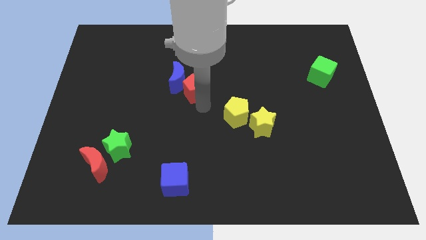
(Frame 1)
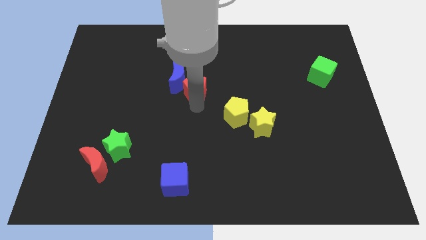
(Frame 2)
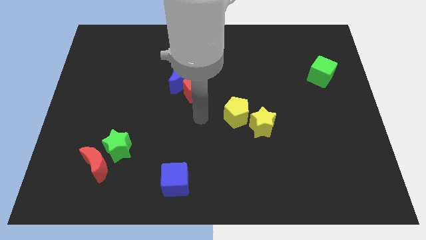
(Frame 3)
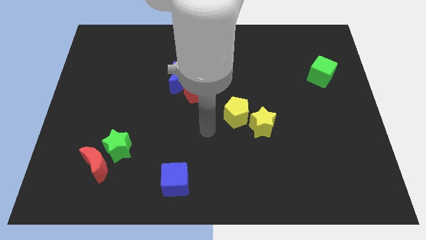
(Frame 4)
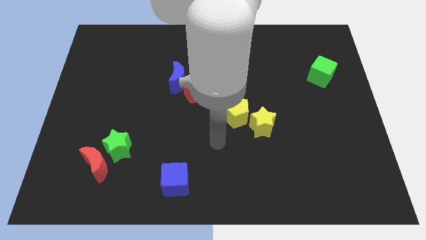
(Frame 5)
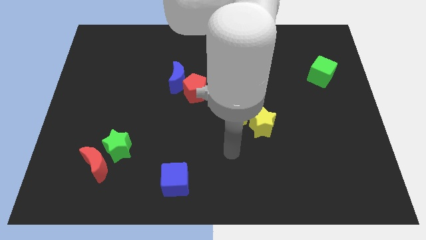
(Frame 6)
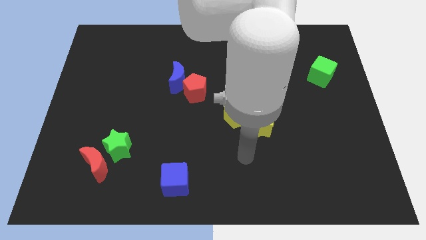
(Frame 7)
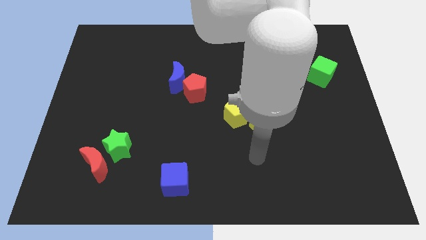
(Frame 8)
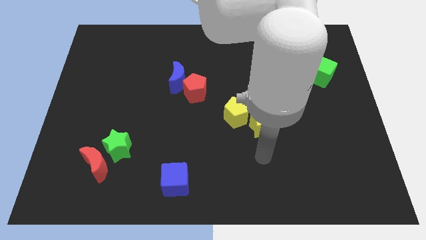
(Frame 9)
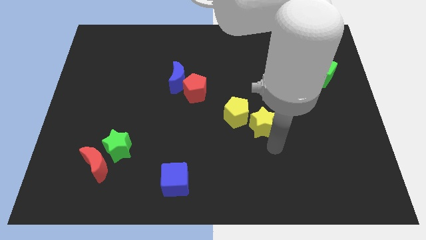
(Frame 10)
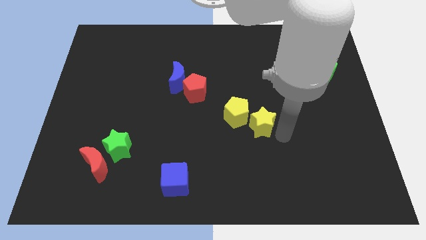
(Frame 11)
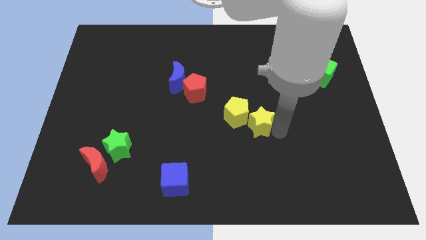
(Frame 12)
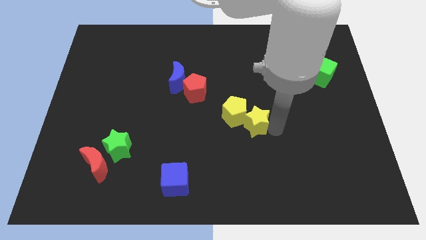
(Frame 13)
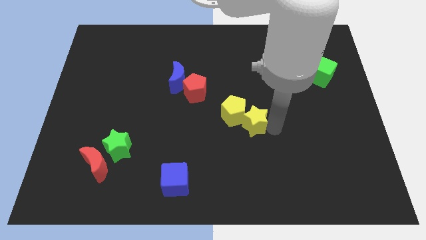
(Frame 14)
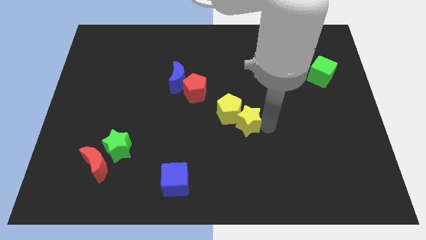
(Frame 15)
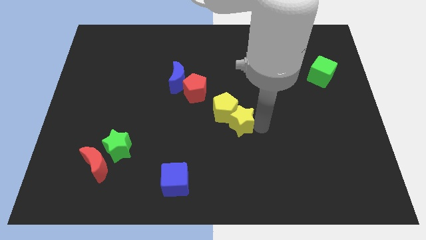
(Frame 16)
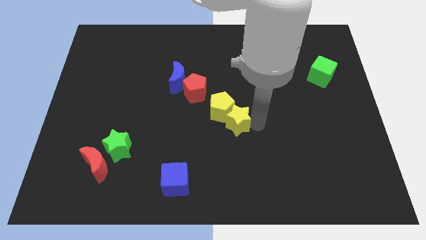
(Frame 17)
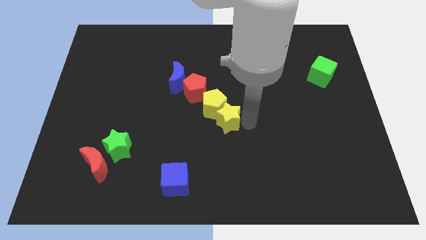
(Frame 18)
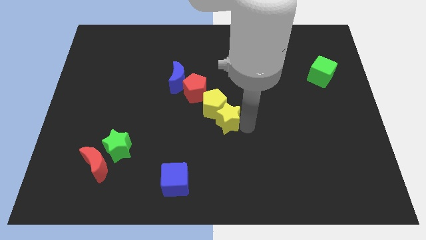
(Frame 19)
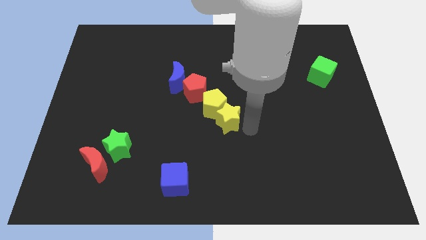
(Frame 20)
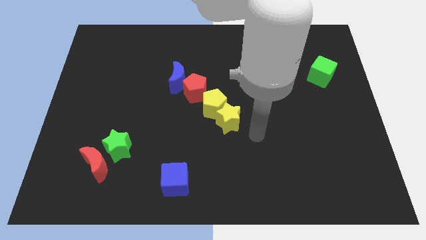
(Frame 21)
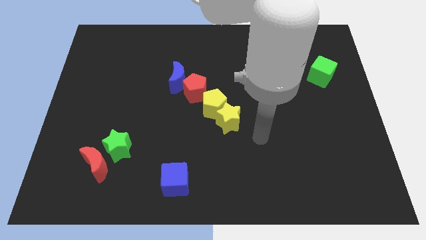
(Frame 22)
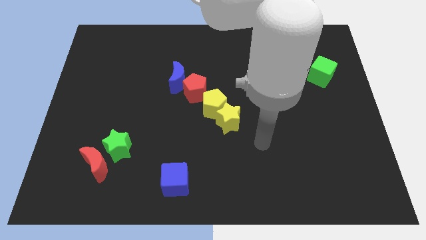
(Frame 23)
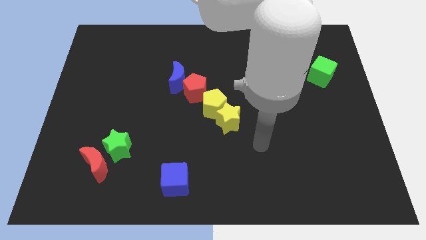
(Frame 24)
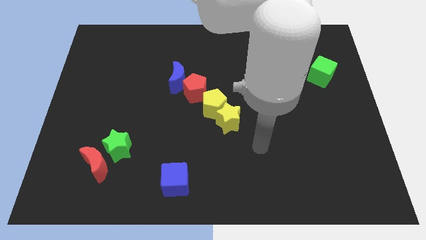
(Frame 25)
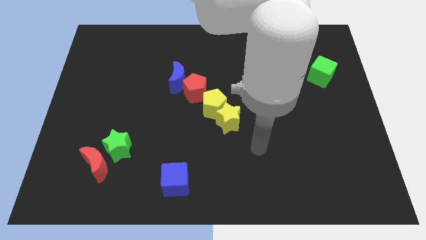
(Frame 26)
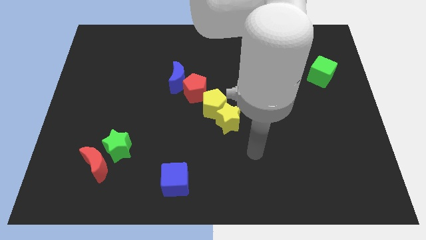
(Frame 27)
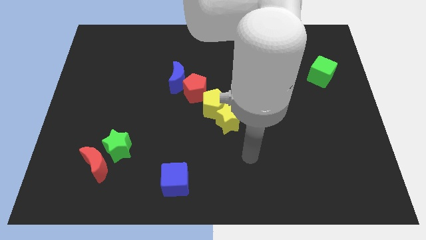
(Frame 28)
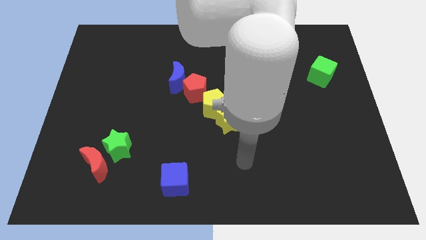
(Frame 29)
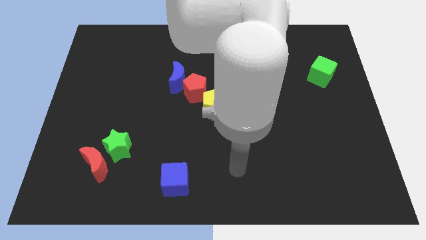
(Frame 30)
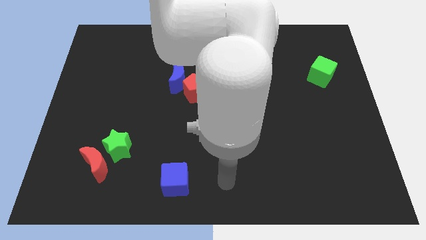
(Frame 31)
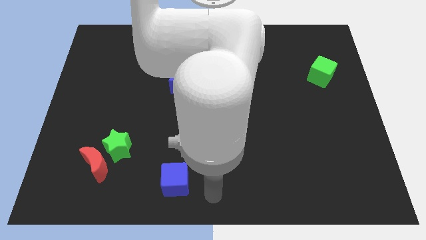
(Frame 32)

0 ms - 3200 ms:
push the yellow star along with the yellow pentagon towards the red pentagon

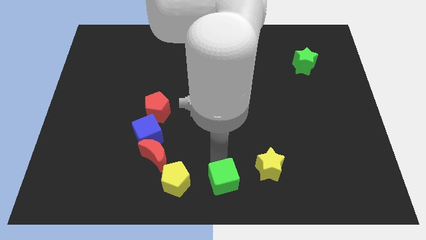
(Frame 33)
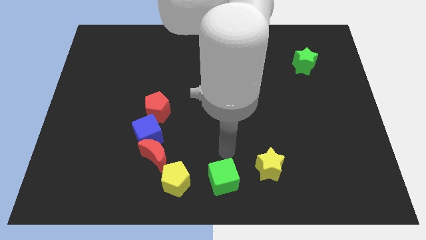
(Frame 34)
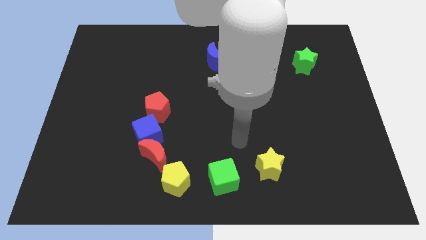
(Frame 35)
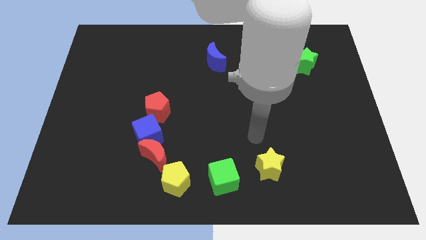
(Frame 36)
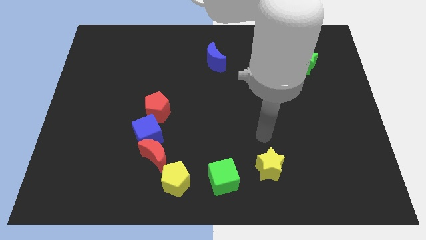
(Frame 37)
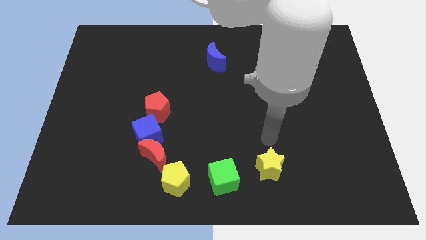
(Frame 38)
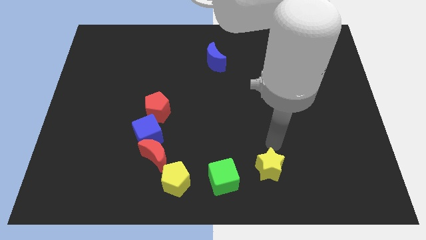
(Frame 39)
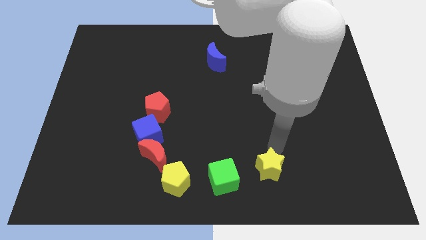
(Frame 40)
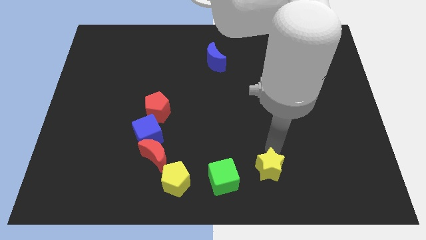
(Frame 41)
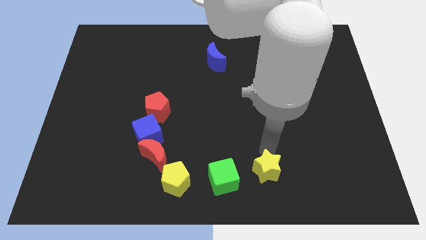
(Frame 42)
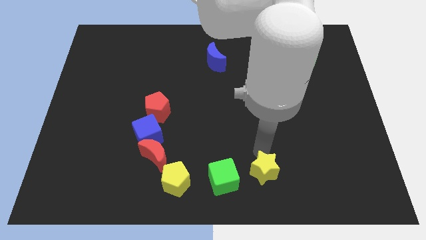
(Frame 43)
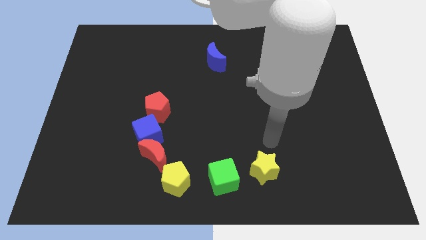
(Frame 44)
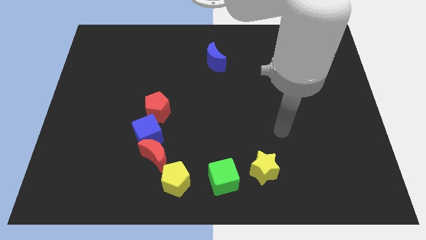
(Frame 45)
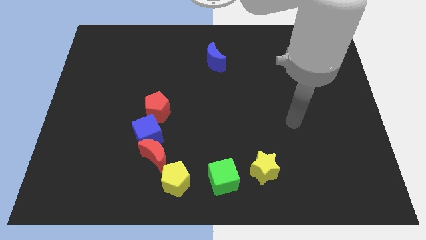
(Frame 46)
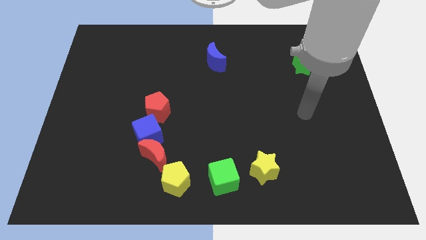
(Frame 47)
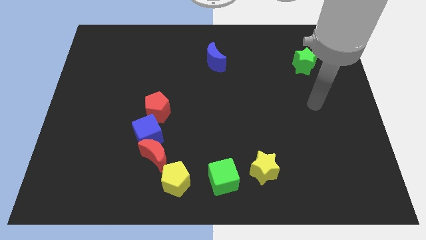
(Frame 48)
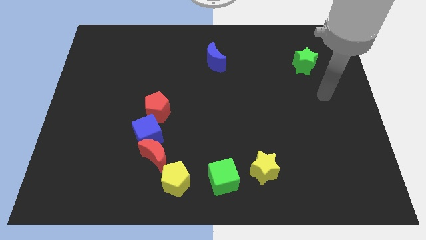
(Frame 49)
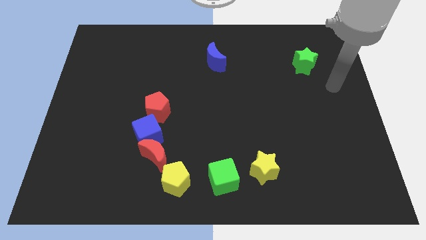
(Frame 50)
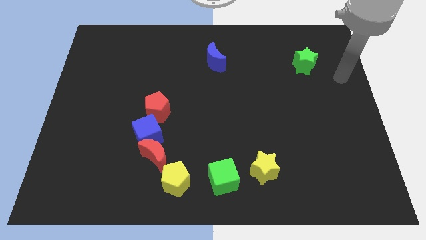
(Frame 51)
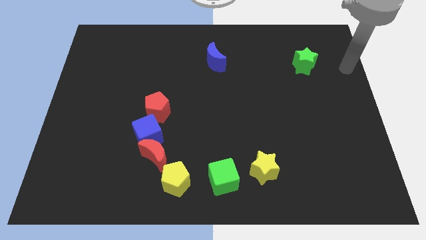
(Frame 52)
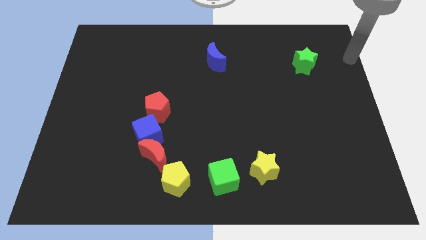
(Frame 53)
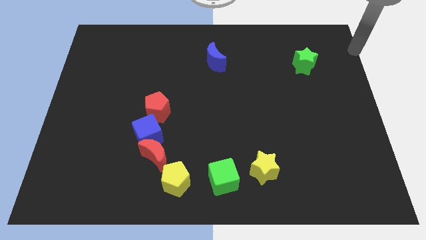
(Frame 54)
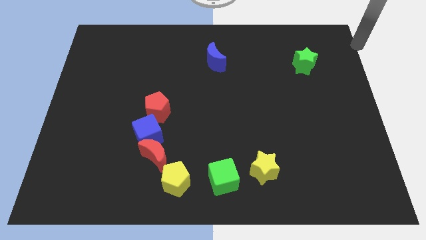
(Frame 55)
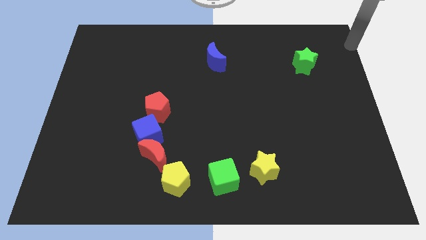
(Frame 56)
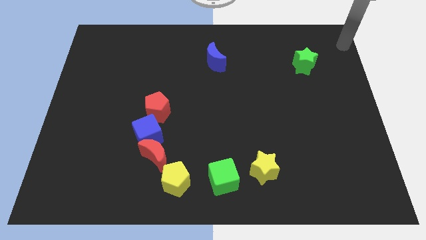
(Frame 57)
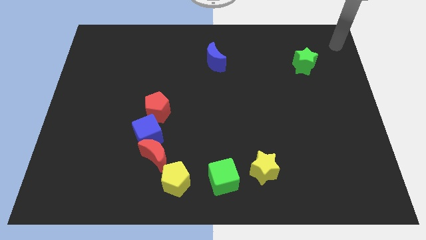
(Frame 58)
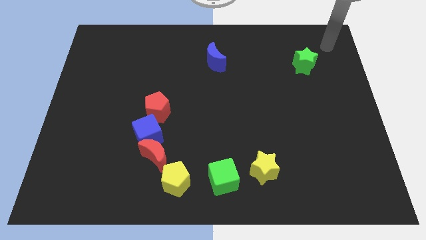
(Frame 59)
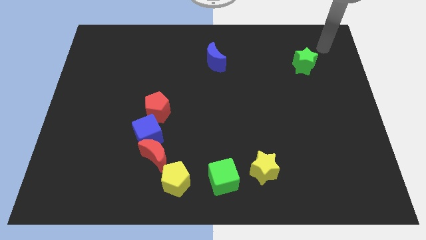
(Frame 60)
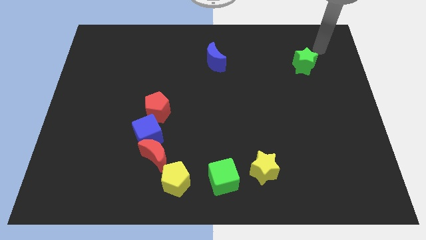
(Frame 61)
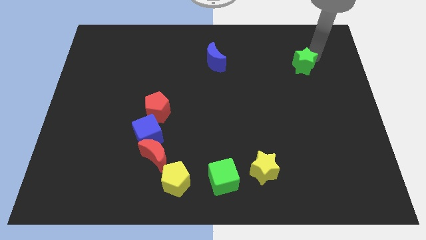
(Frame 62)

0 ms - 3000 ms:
place the arm diagonally to the green star

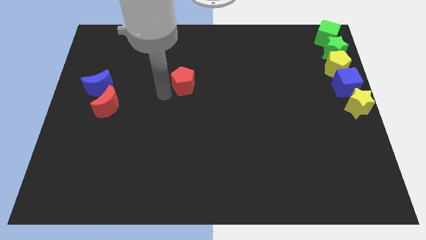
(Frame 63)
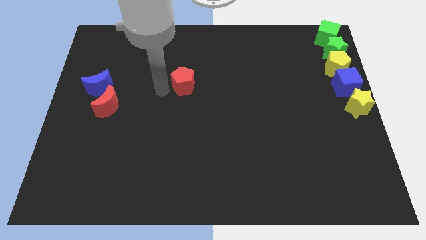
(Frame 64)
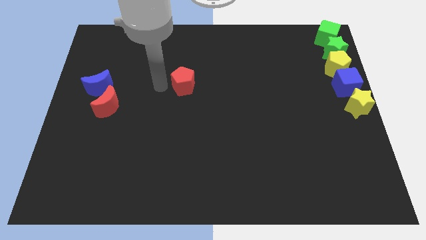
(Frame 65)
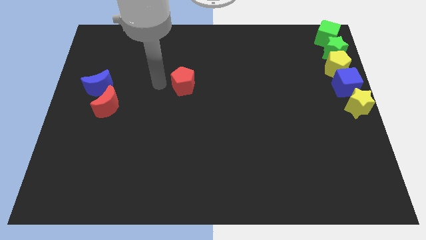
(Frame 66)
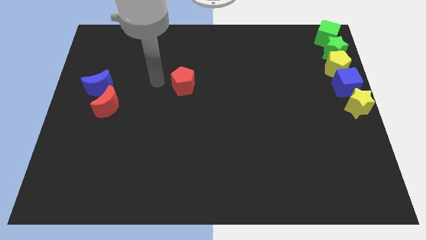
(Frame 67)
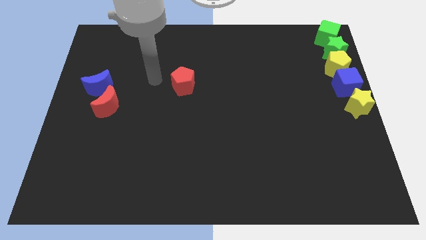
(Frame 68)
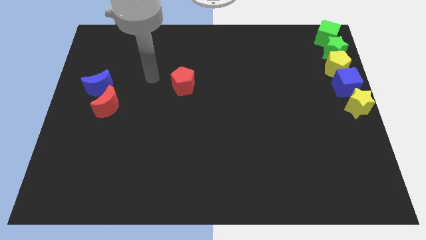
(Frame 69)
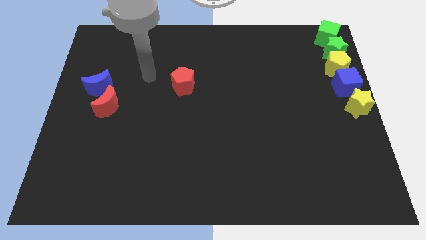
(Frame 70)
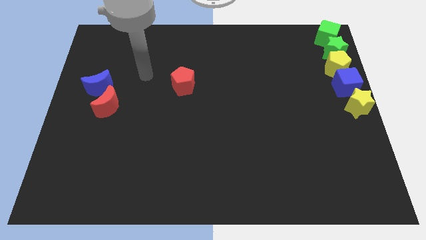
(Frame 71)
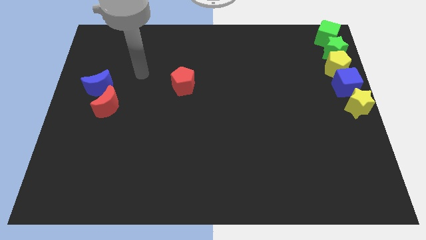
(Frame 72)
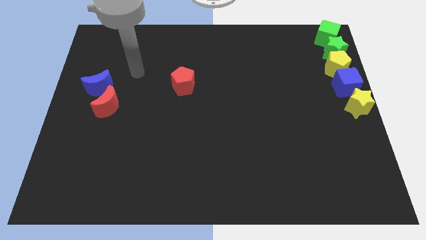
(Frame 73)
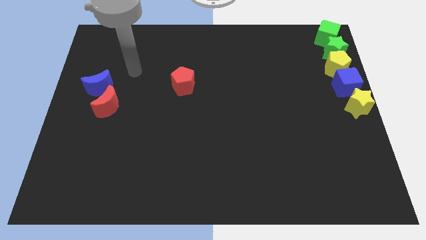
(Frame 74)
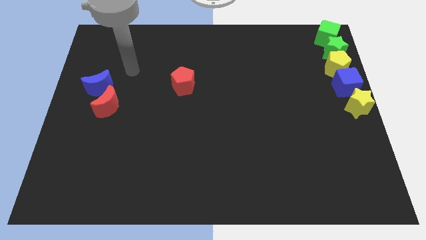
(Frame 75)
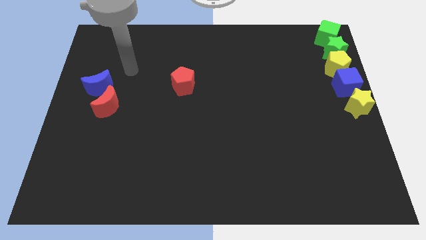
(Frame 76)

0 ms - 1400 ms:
move the arm away from the red pentagon

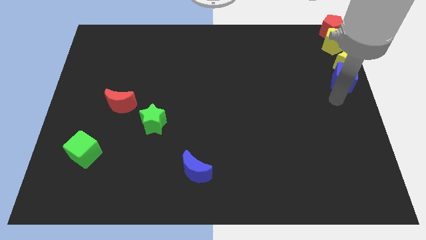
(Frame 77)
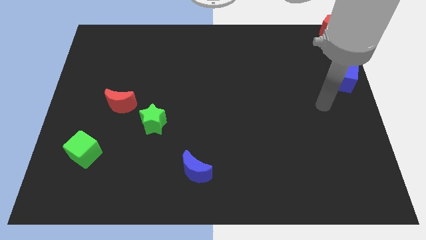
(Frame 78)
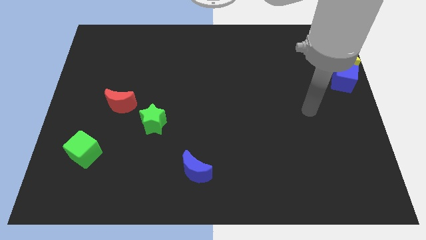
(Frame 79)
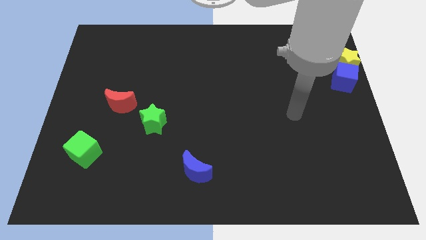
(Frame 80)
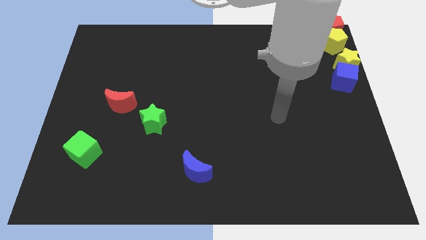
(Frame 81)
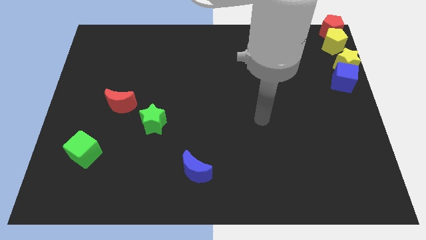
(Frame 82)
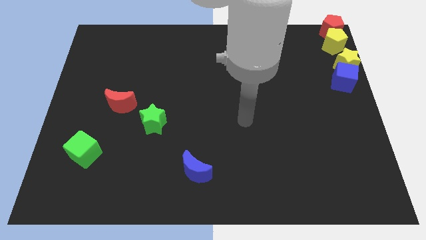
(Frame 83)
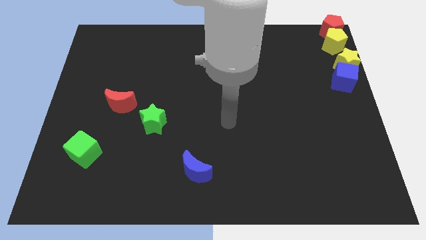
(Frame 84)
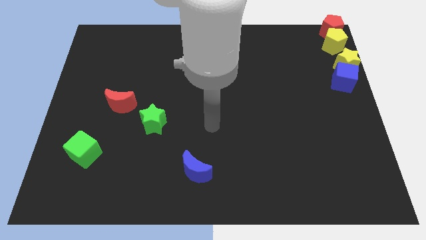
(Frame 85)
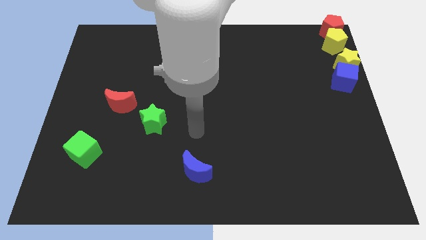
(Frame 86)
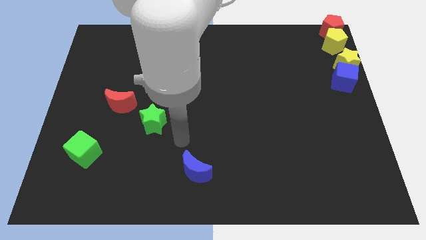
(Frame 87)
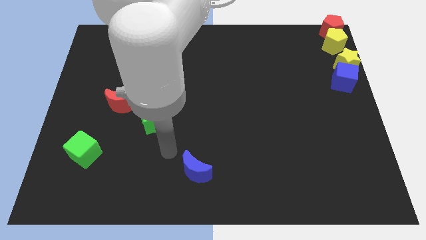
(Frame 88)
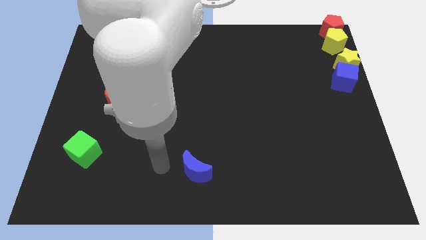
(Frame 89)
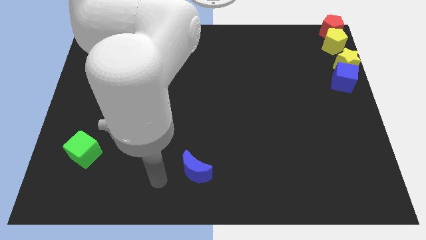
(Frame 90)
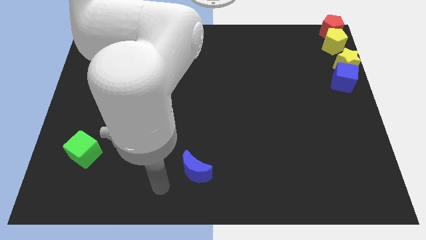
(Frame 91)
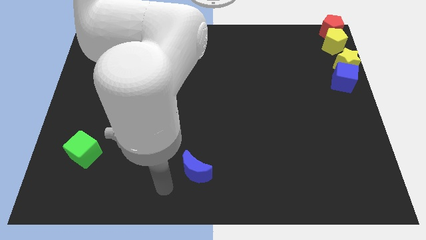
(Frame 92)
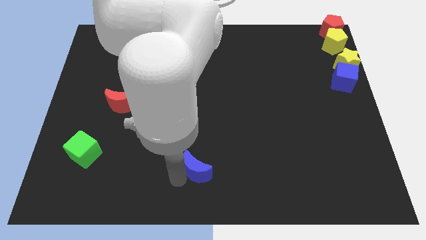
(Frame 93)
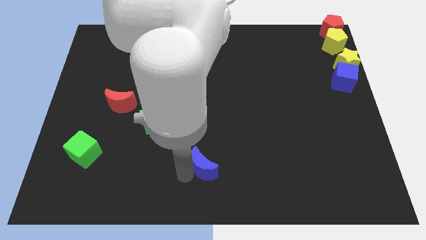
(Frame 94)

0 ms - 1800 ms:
touch the left side of the blue crescent
